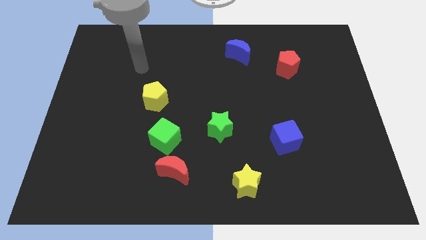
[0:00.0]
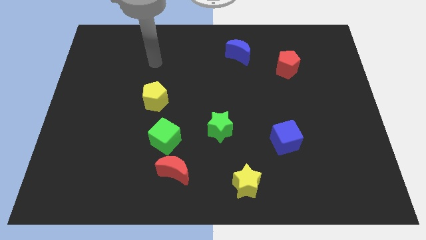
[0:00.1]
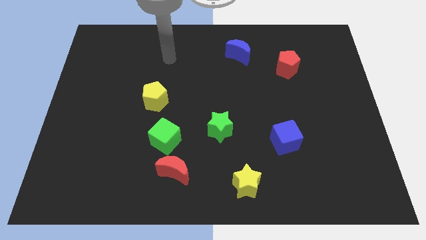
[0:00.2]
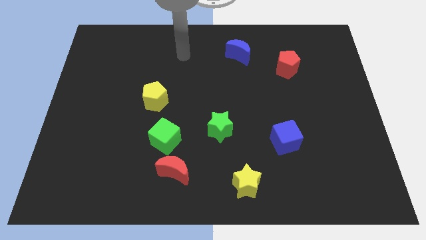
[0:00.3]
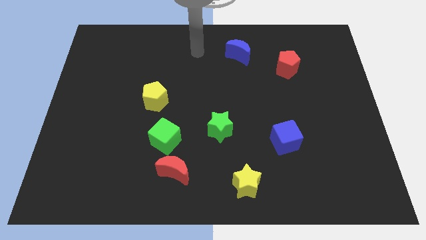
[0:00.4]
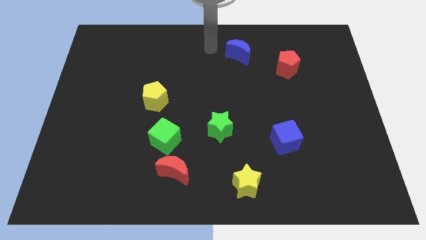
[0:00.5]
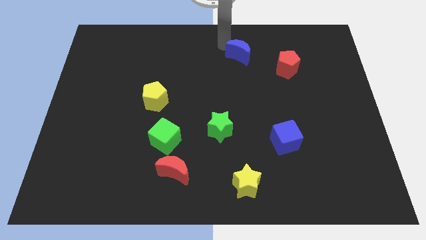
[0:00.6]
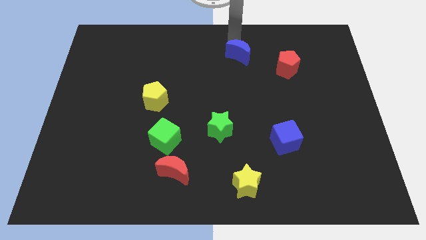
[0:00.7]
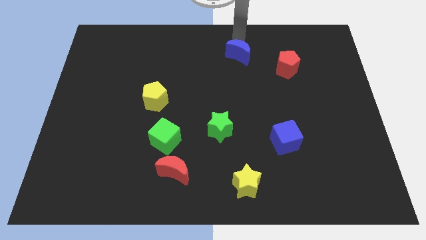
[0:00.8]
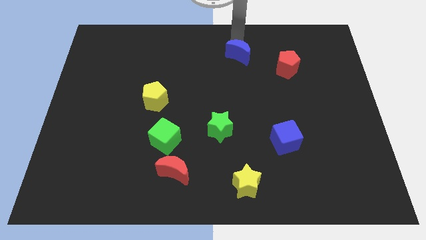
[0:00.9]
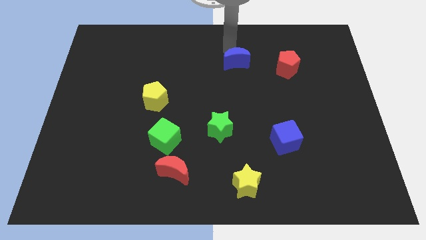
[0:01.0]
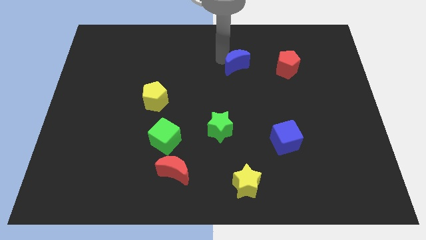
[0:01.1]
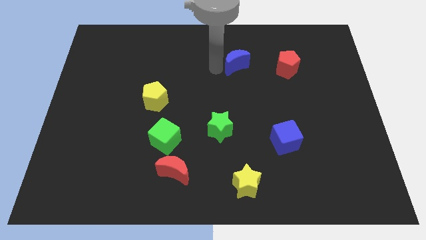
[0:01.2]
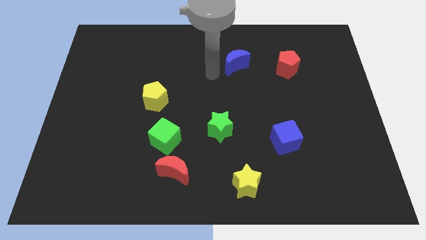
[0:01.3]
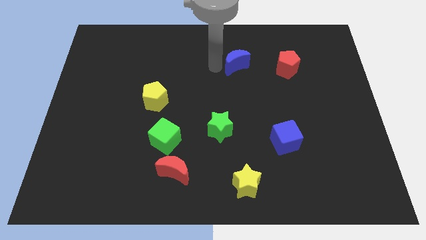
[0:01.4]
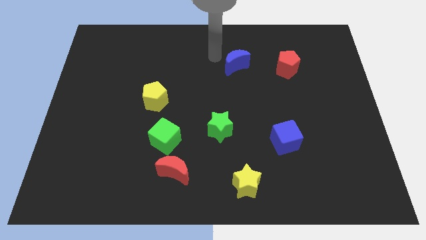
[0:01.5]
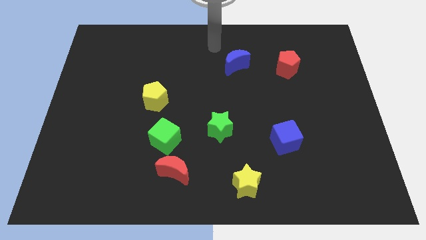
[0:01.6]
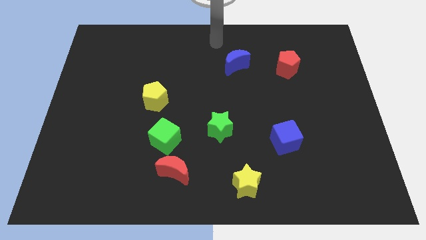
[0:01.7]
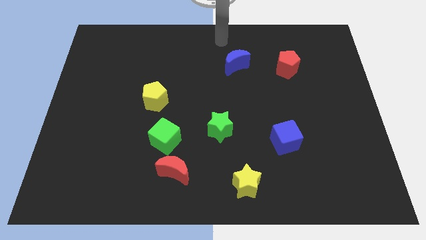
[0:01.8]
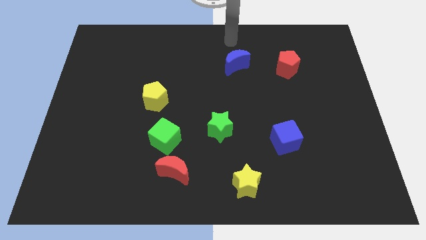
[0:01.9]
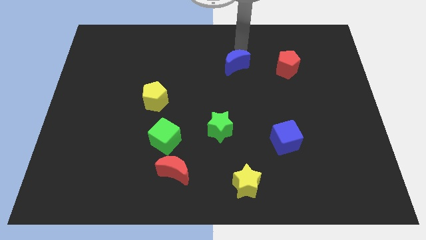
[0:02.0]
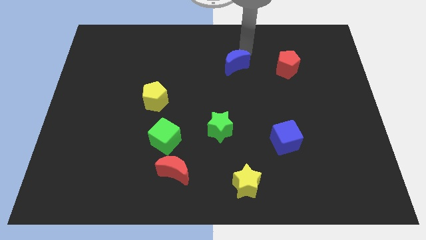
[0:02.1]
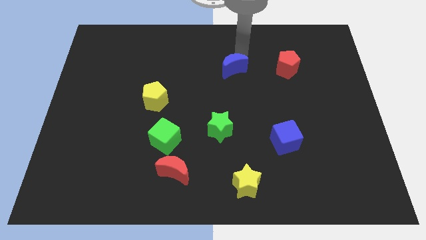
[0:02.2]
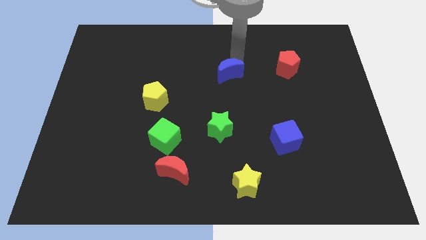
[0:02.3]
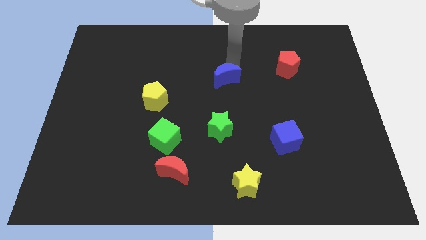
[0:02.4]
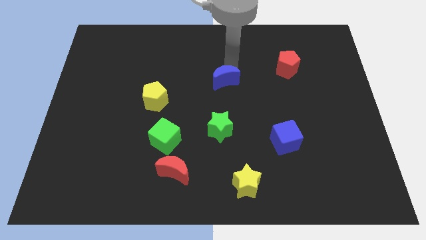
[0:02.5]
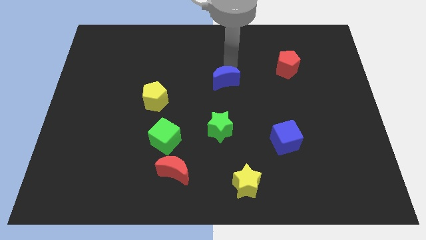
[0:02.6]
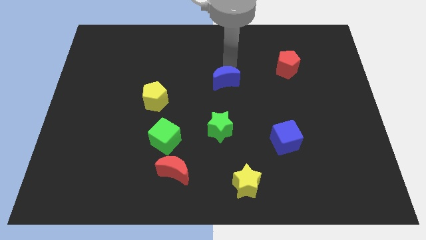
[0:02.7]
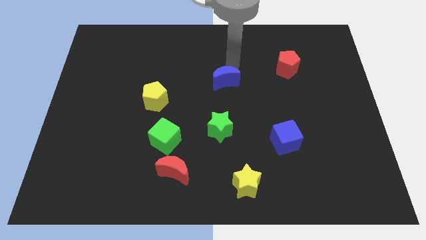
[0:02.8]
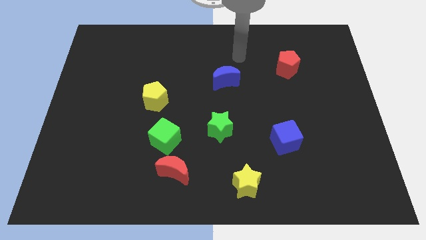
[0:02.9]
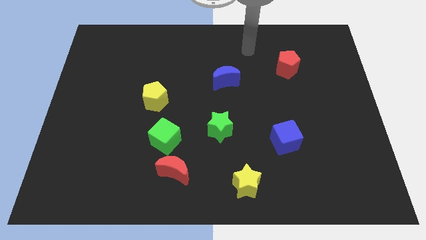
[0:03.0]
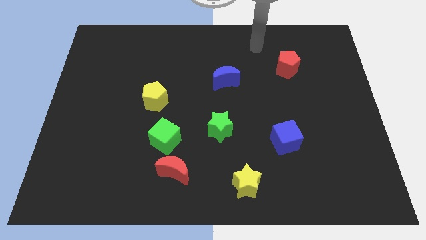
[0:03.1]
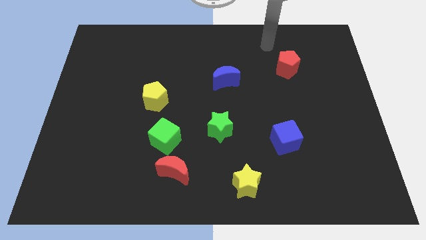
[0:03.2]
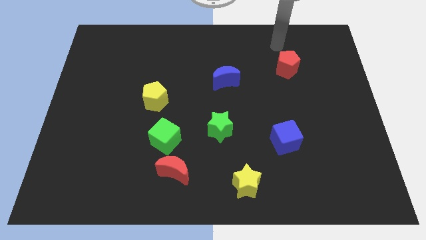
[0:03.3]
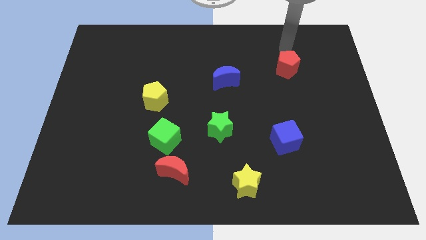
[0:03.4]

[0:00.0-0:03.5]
place the blue moon above the green star

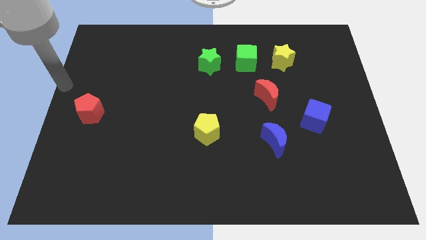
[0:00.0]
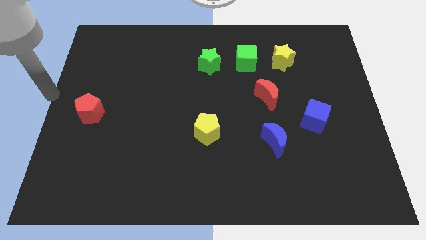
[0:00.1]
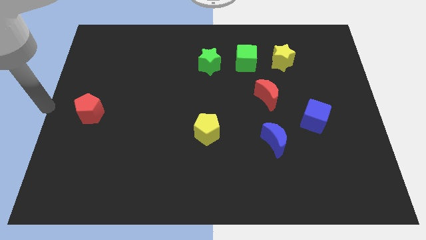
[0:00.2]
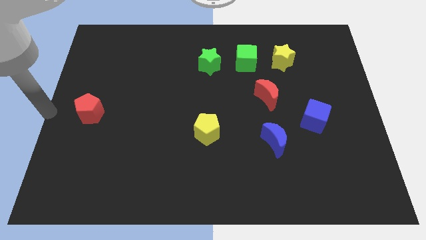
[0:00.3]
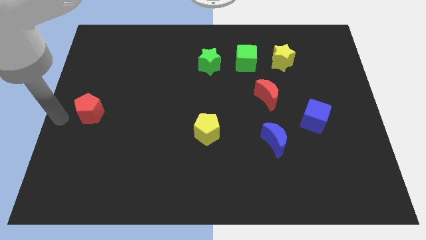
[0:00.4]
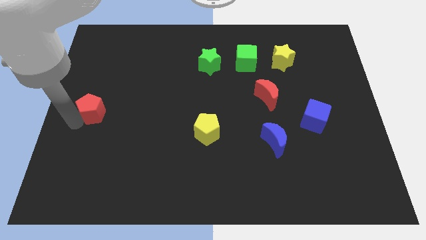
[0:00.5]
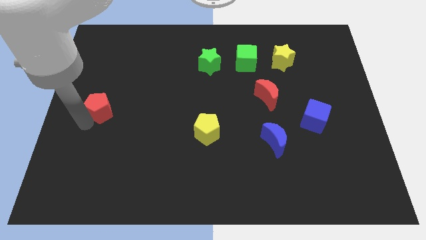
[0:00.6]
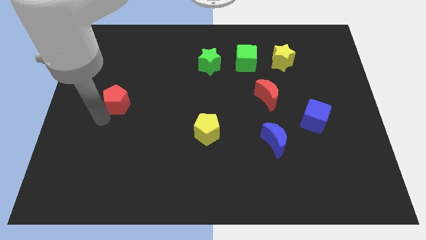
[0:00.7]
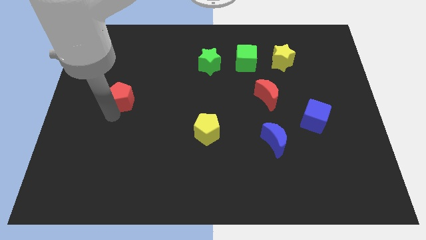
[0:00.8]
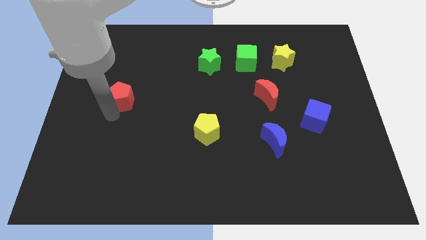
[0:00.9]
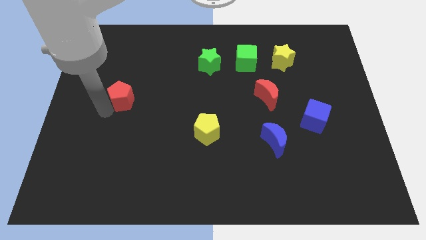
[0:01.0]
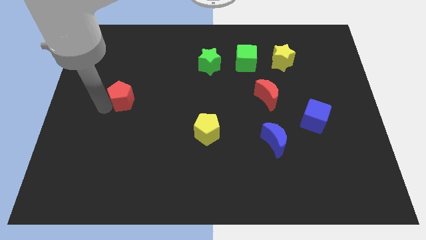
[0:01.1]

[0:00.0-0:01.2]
place the red pentagon diagonally to the yellow pentagon

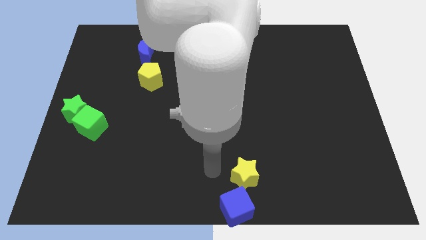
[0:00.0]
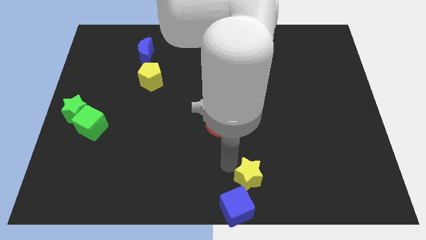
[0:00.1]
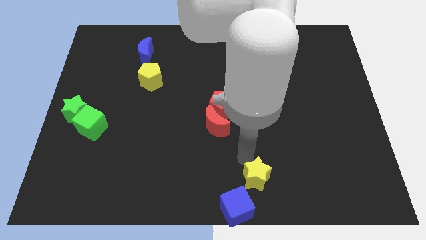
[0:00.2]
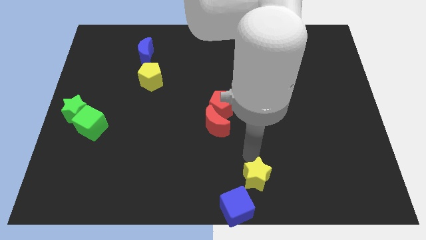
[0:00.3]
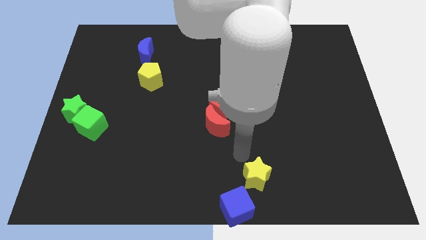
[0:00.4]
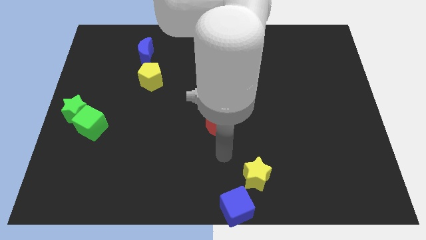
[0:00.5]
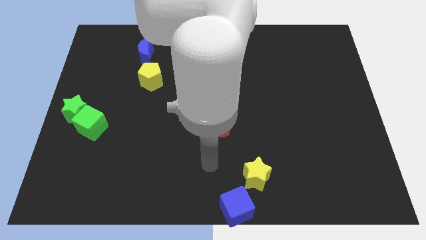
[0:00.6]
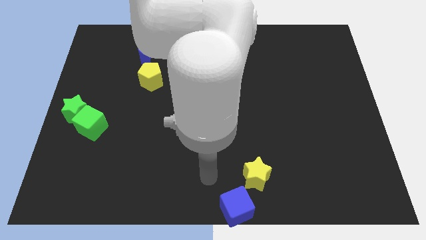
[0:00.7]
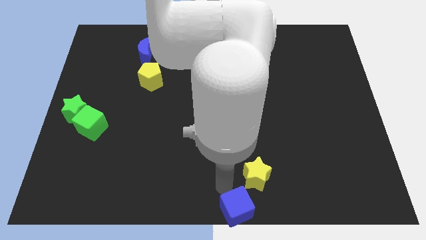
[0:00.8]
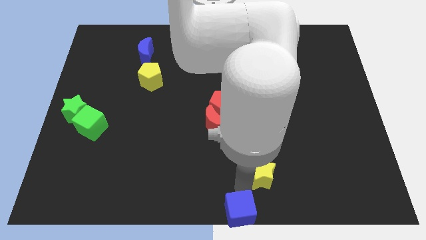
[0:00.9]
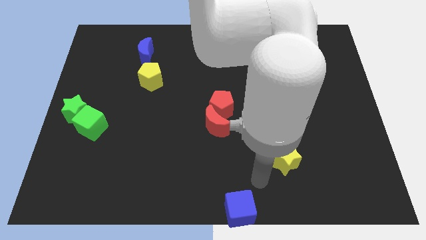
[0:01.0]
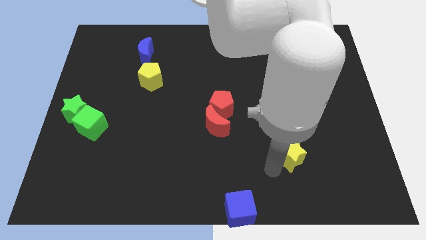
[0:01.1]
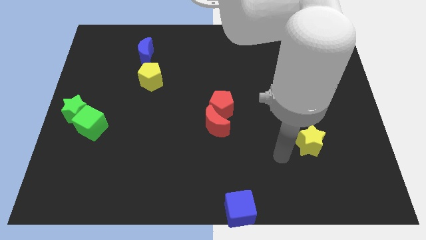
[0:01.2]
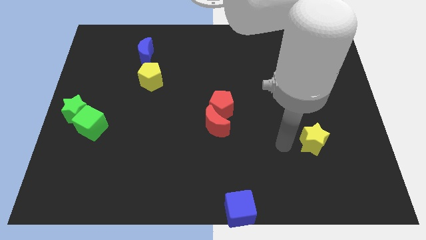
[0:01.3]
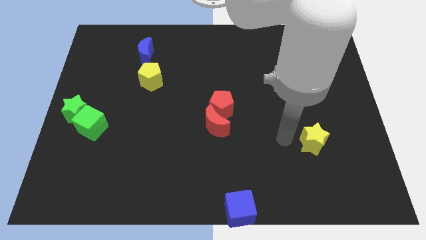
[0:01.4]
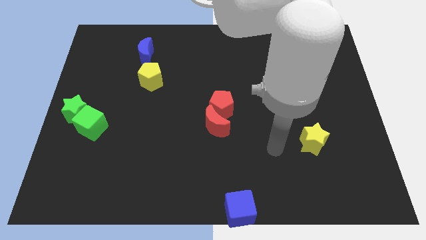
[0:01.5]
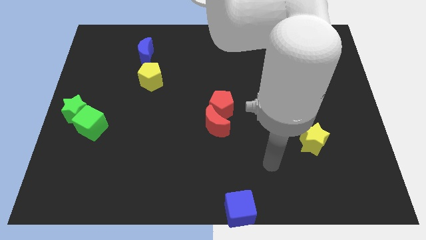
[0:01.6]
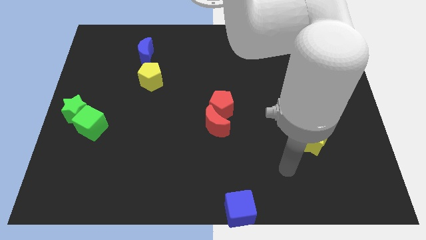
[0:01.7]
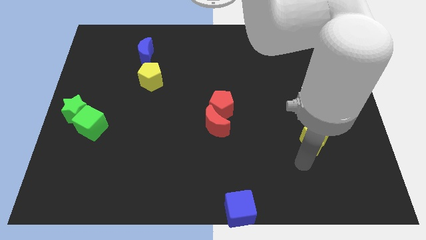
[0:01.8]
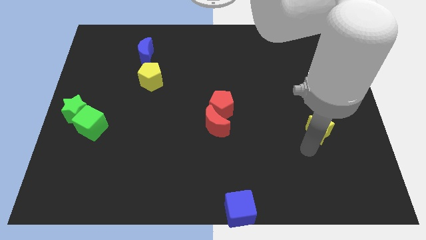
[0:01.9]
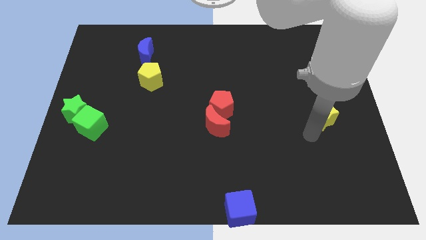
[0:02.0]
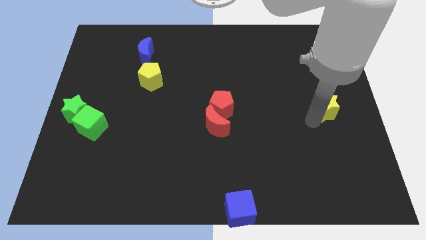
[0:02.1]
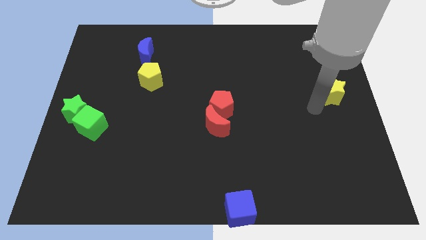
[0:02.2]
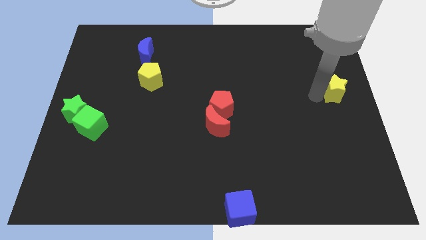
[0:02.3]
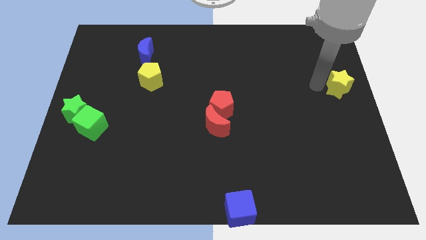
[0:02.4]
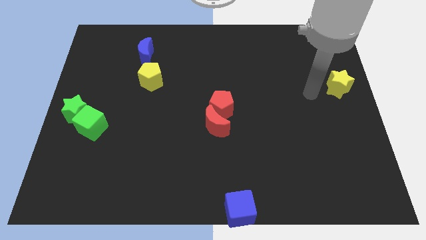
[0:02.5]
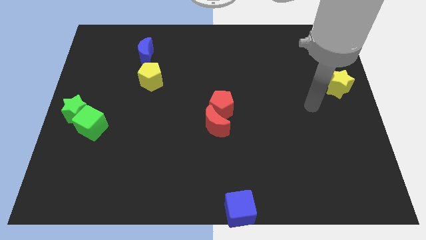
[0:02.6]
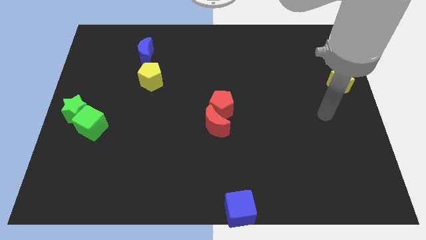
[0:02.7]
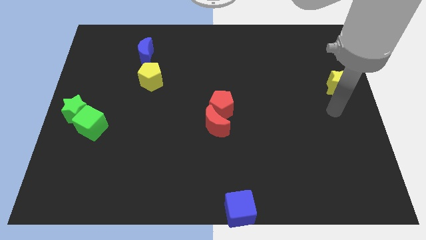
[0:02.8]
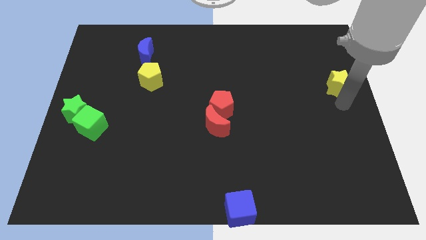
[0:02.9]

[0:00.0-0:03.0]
move yellow star to the right center

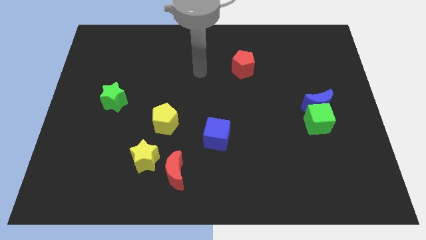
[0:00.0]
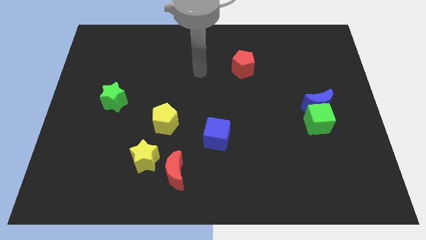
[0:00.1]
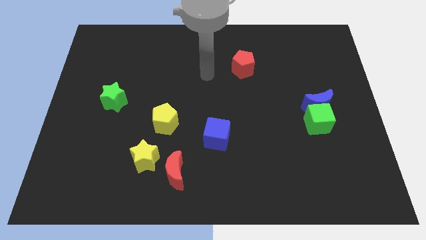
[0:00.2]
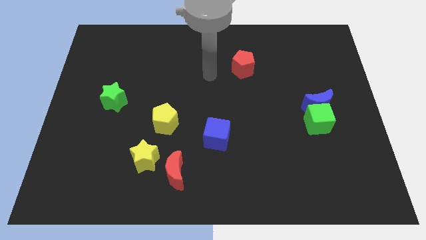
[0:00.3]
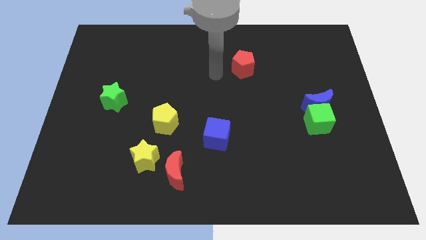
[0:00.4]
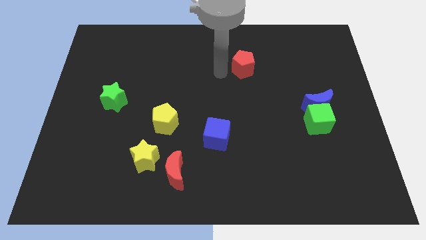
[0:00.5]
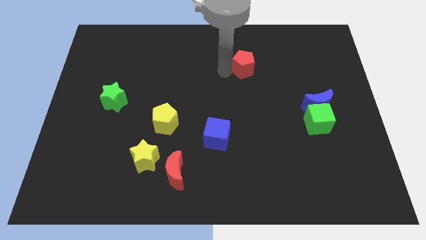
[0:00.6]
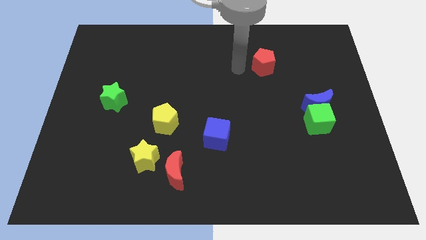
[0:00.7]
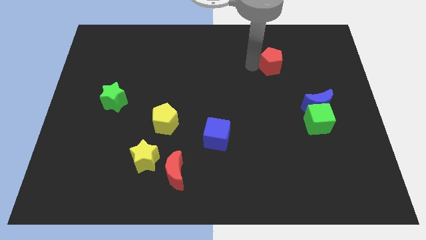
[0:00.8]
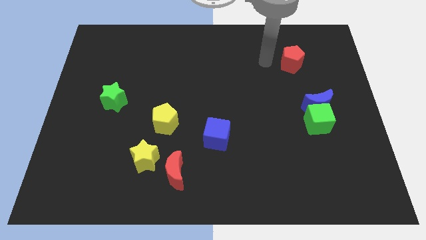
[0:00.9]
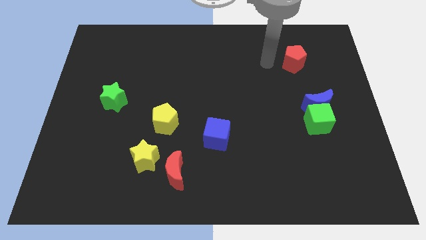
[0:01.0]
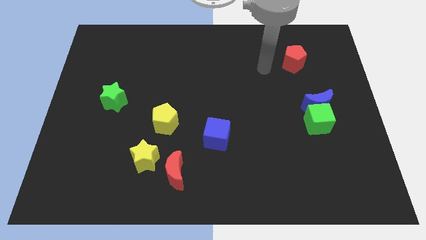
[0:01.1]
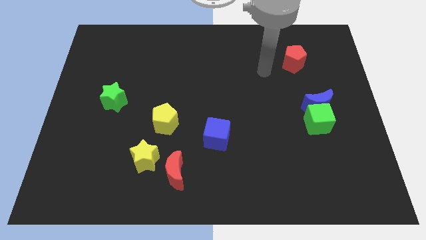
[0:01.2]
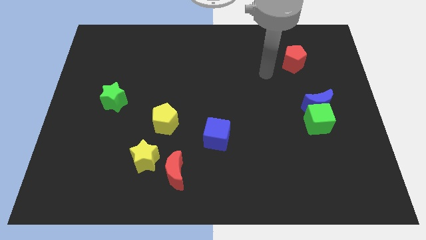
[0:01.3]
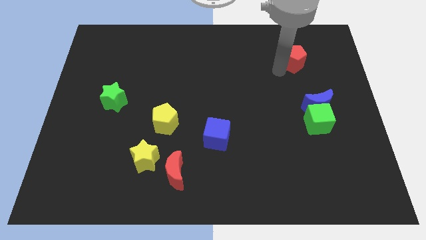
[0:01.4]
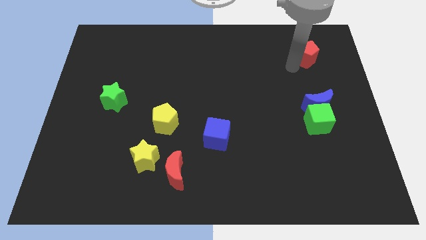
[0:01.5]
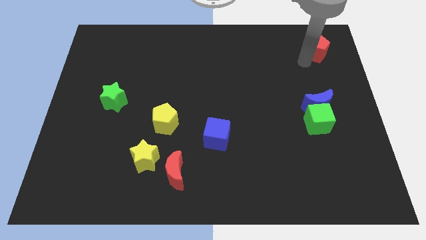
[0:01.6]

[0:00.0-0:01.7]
move the red pentagon vertically to the top side of the blue crescent
